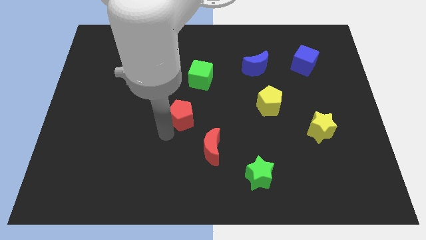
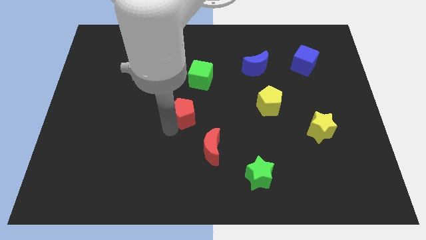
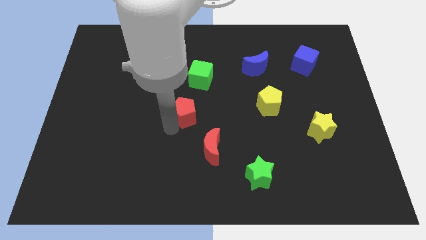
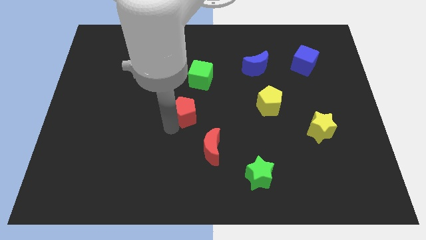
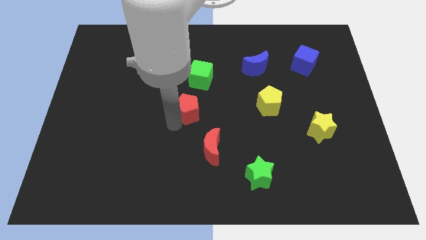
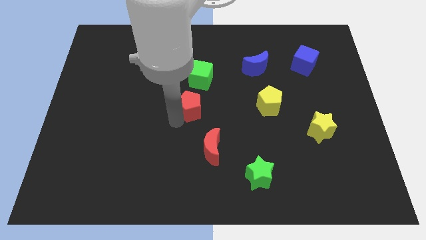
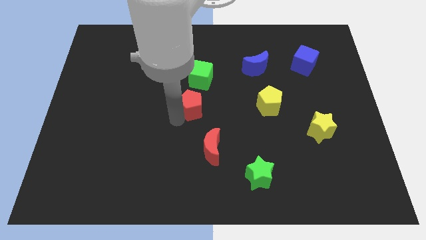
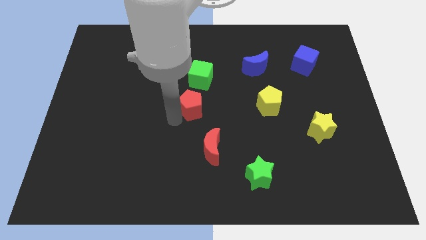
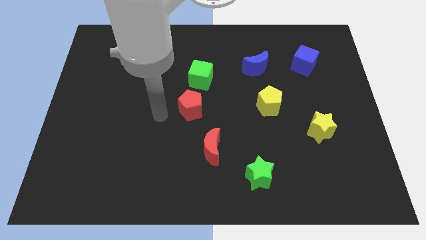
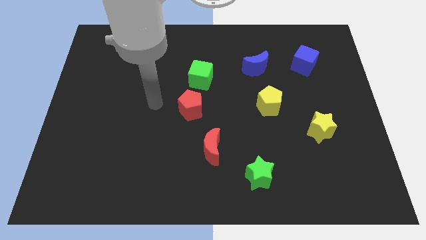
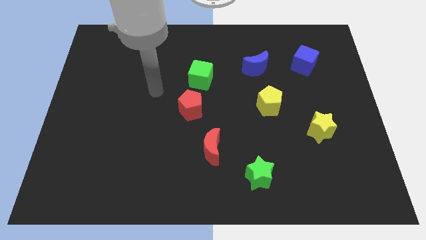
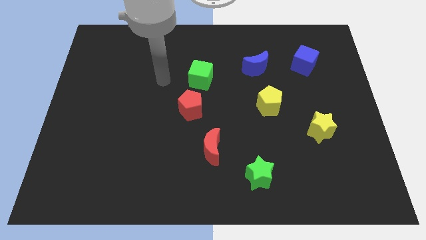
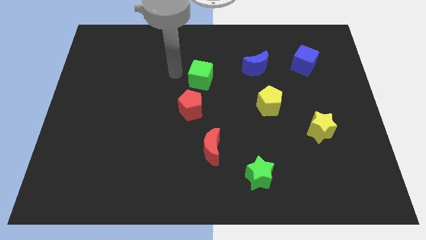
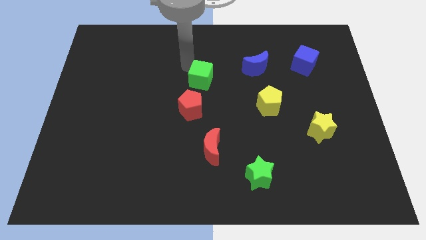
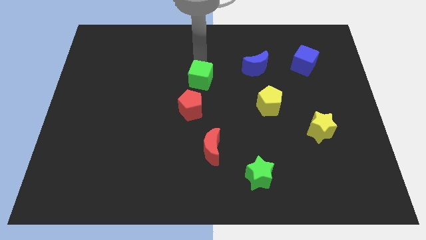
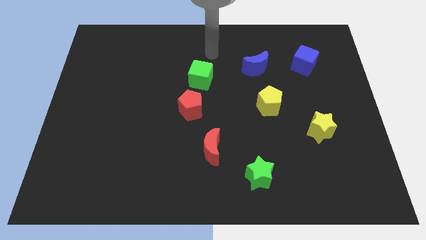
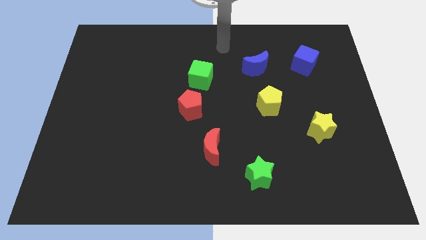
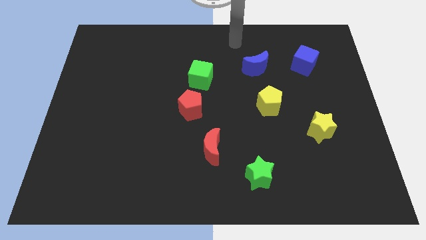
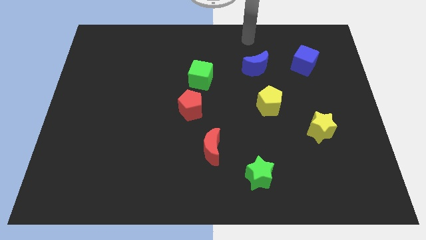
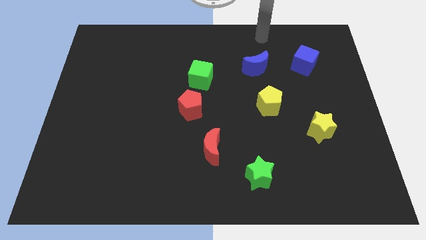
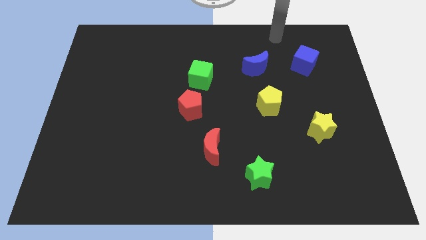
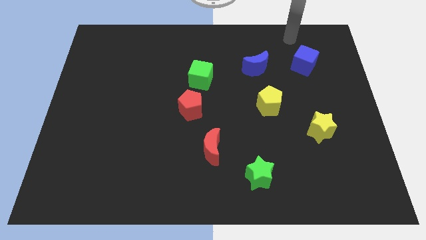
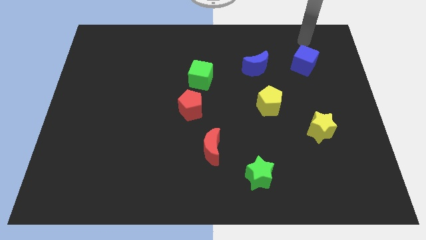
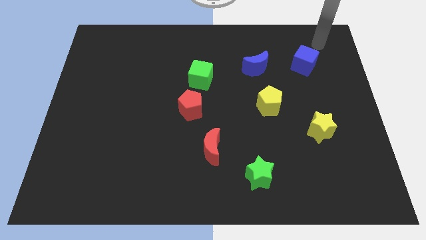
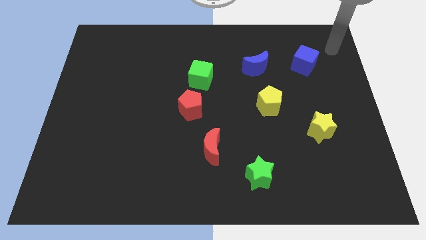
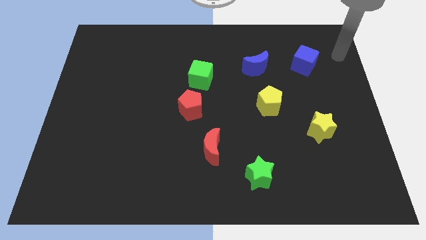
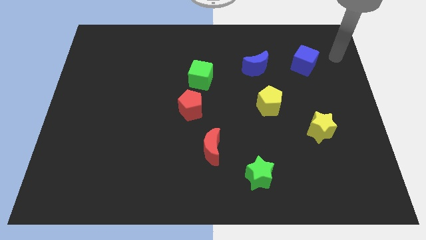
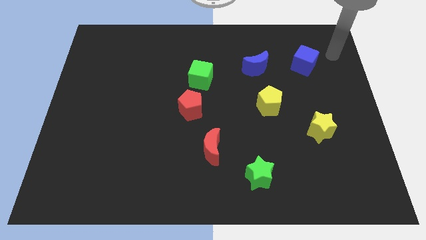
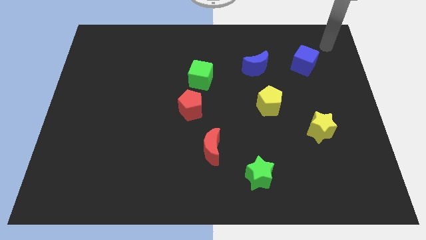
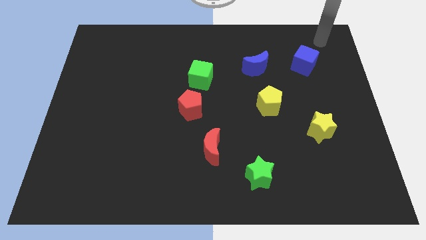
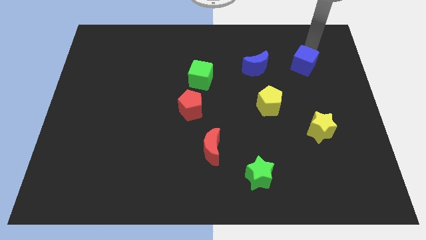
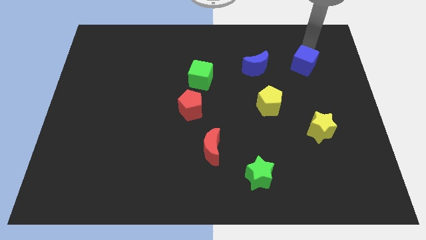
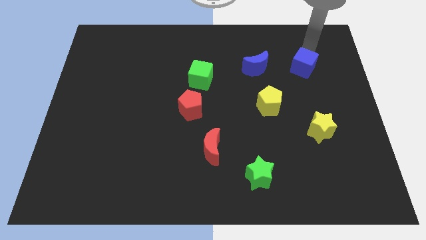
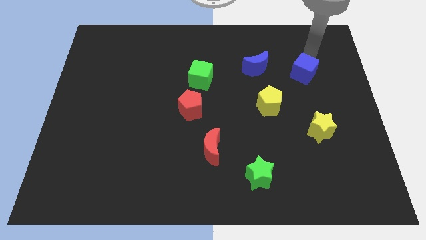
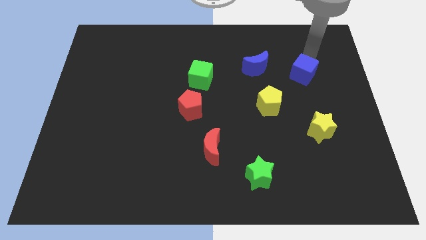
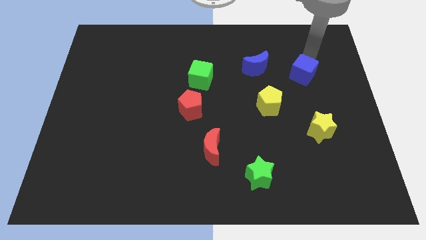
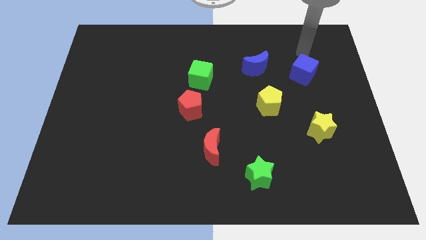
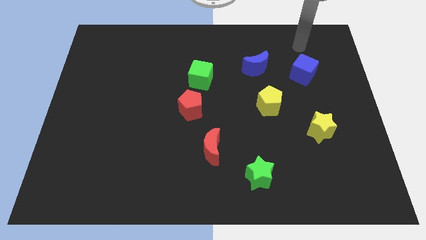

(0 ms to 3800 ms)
adjust the red pentagon and blue cube to form a circle out of all blocks

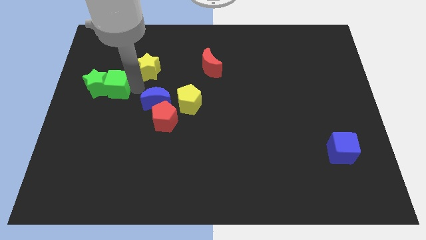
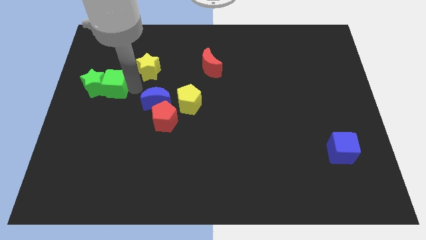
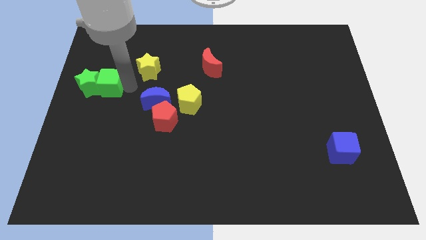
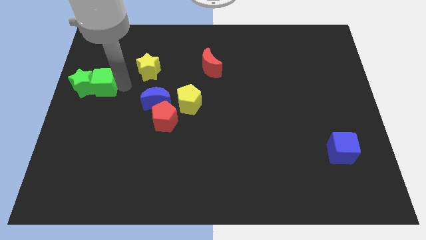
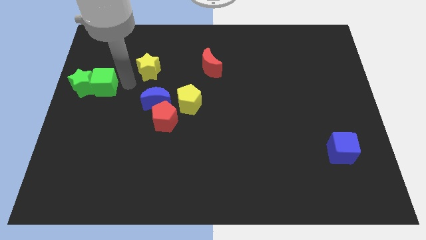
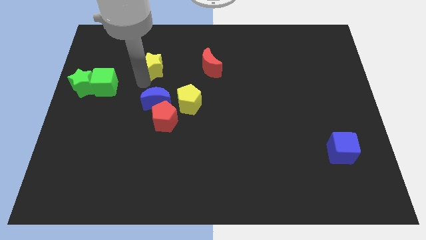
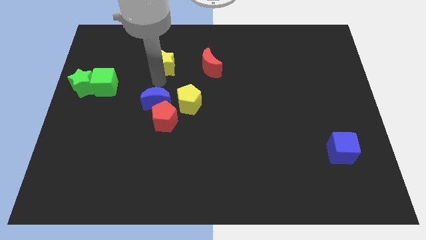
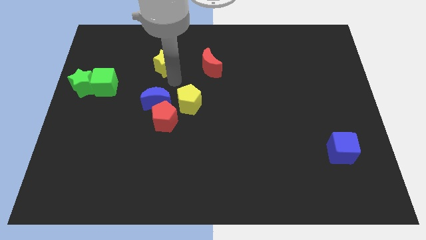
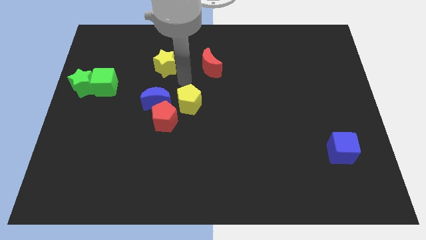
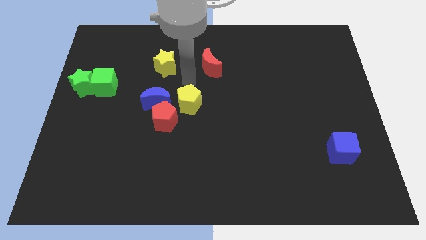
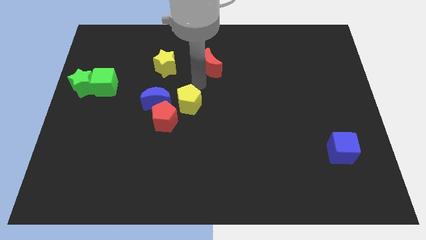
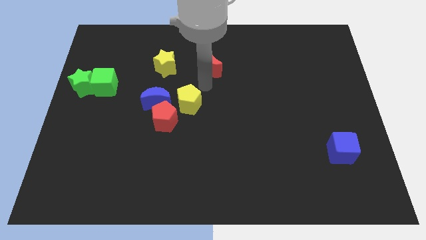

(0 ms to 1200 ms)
slightly push the yellow star diagonal to the left of the red crescent

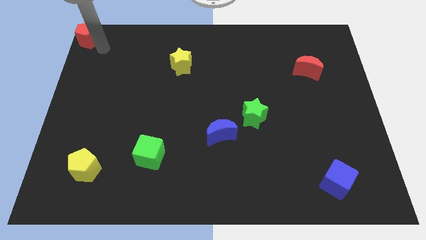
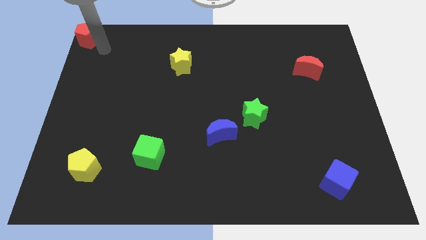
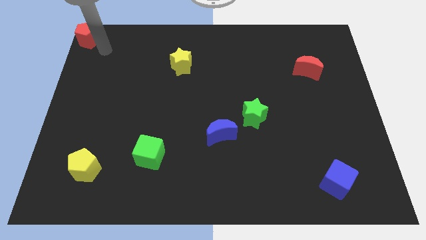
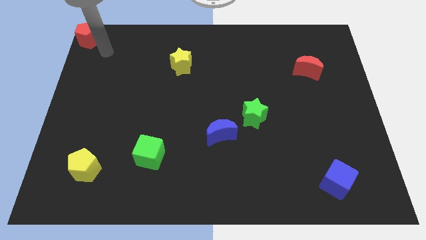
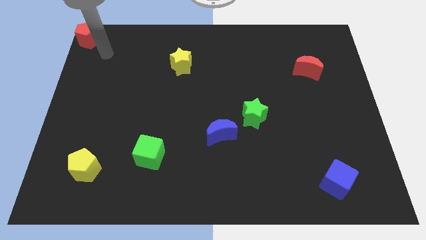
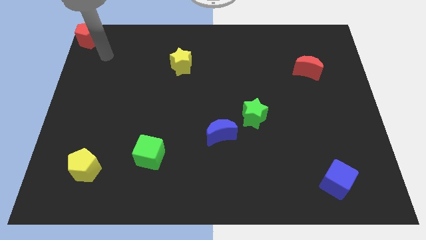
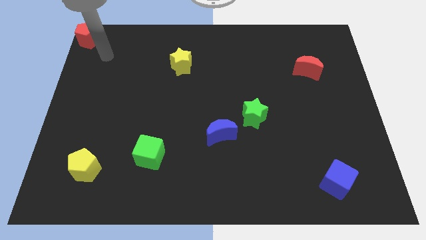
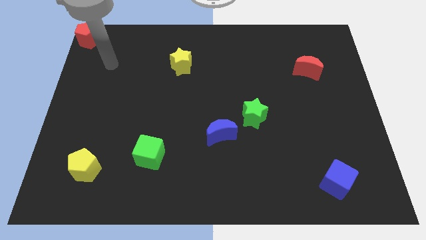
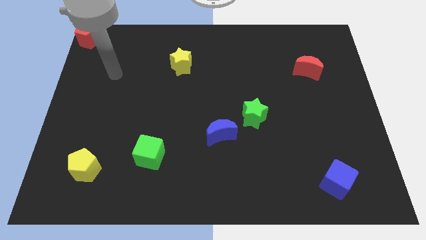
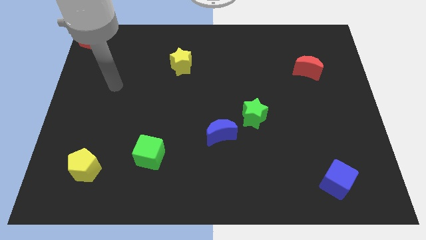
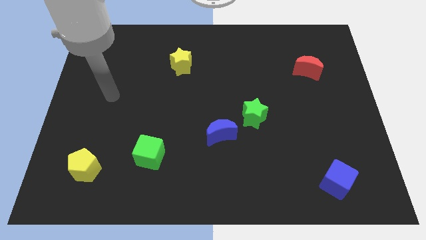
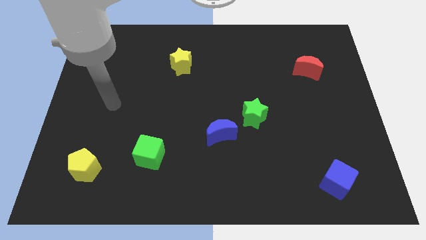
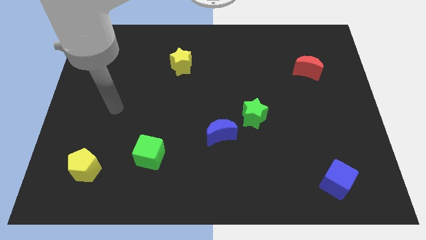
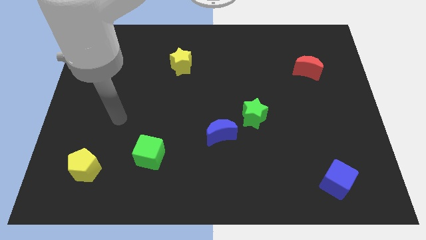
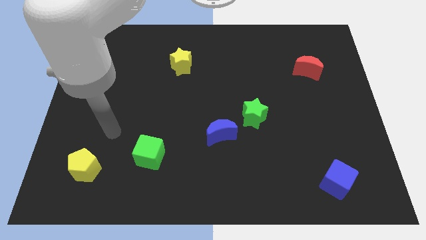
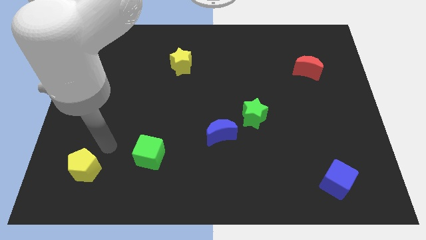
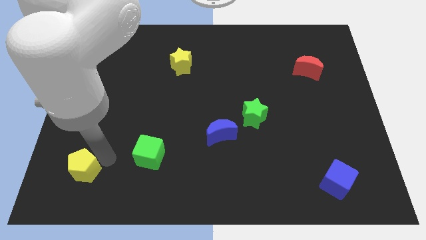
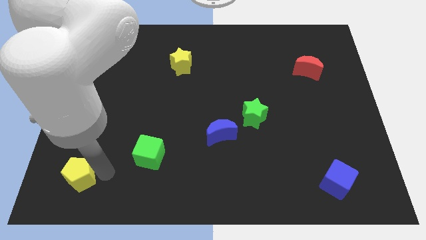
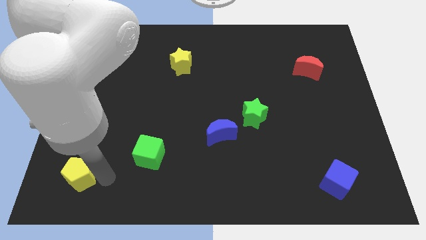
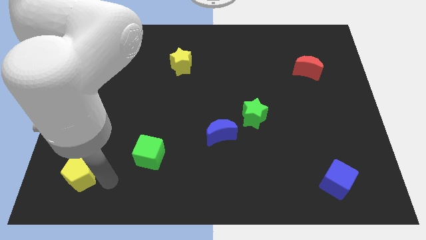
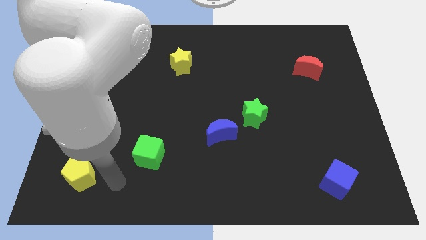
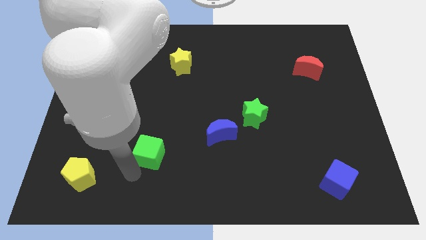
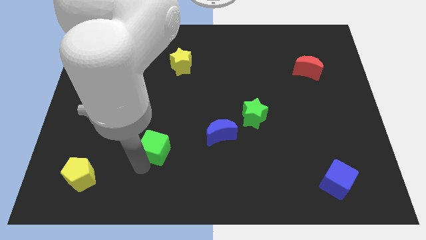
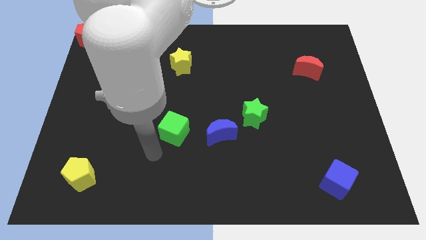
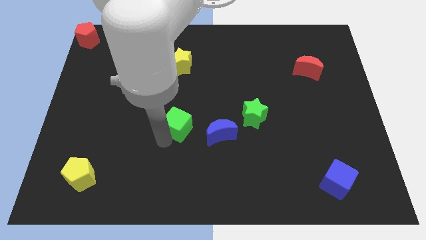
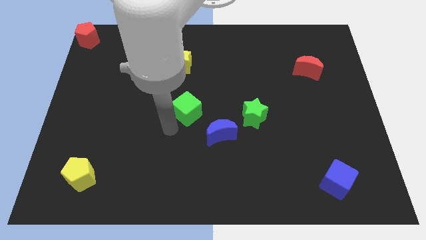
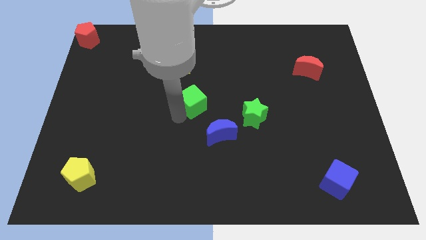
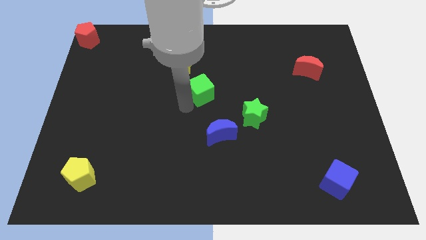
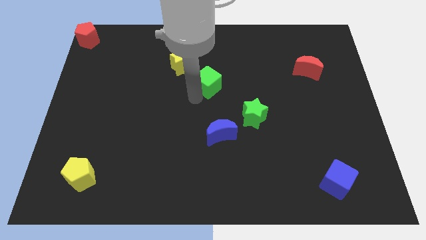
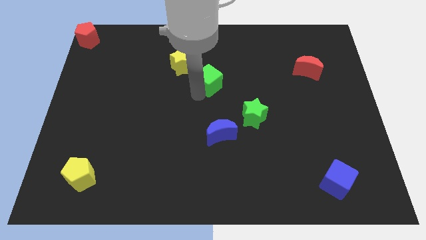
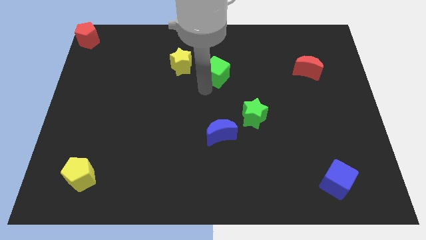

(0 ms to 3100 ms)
move the green cube to the right side of the yellow star

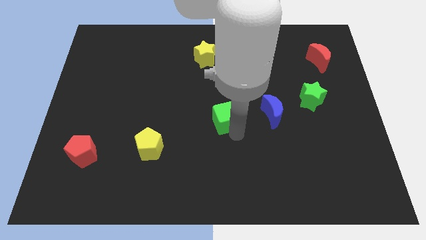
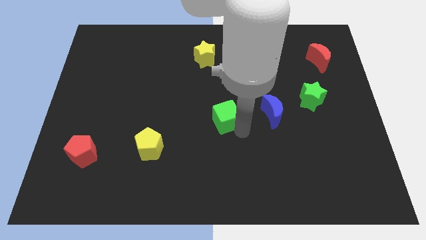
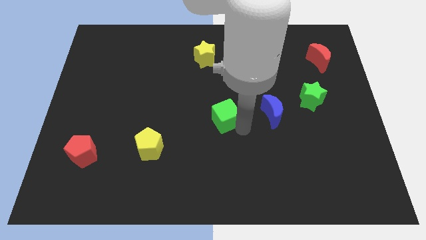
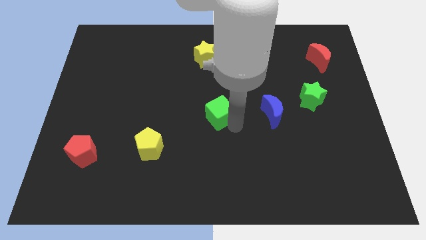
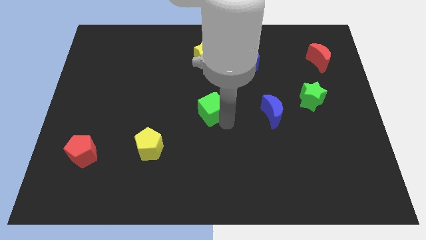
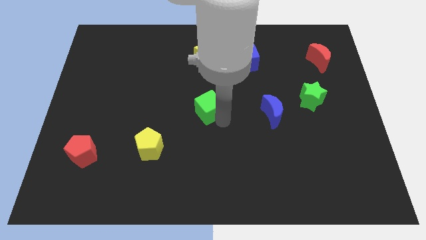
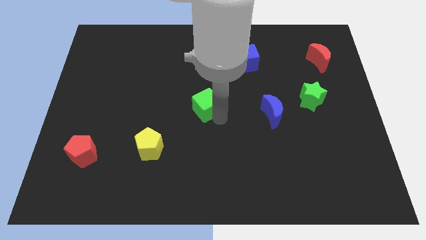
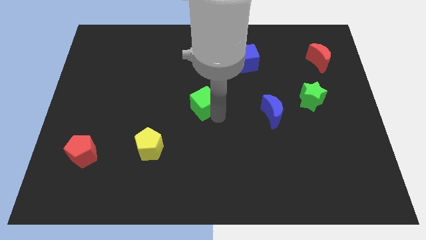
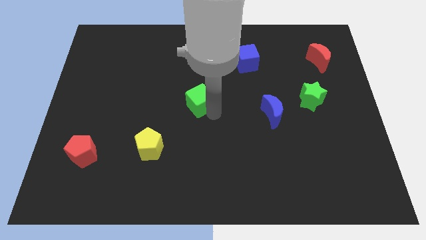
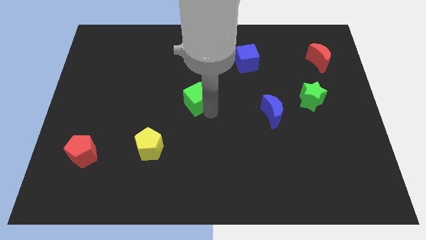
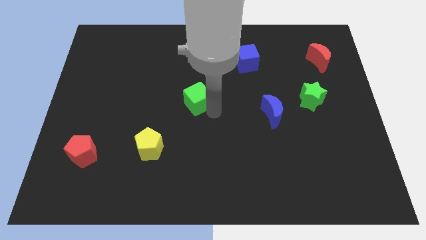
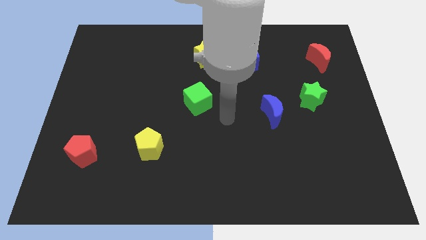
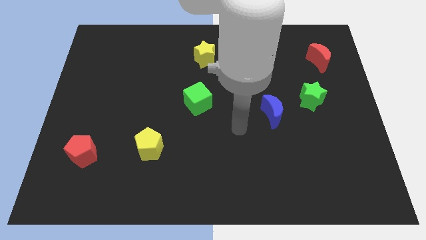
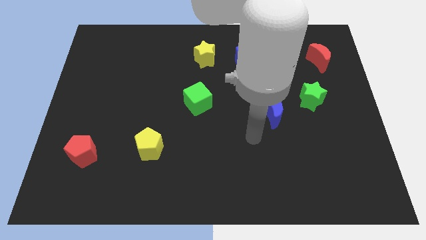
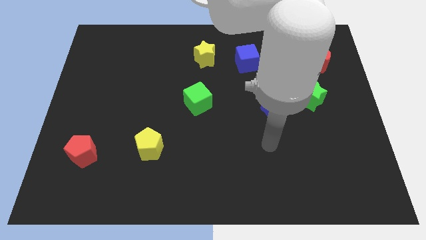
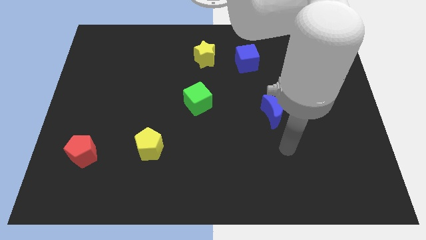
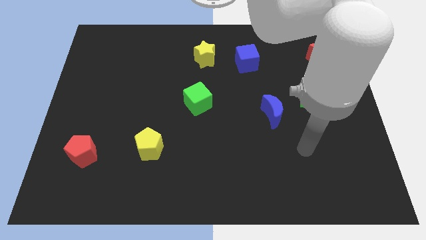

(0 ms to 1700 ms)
place the green cube below the yellow star
